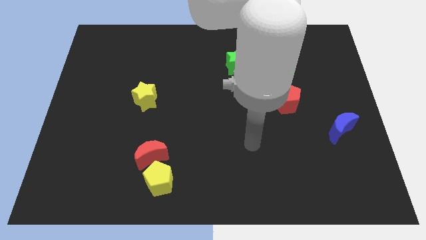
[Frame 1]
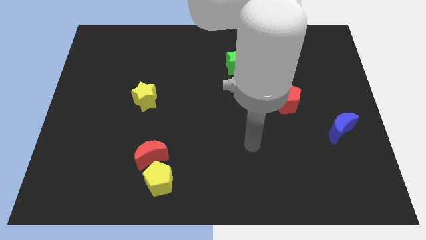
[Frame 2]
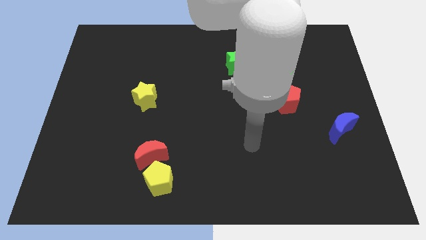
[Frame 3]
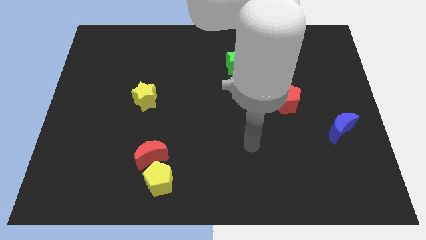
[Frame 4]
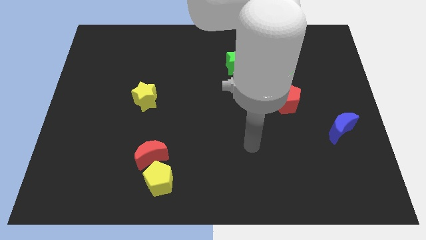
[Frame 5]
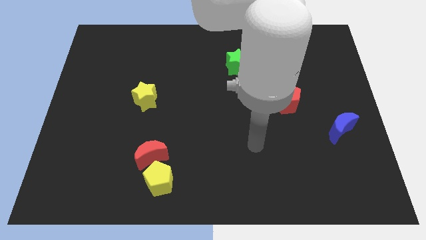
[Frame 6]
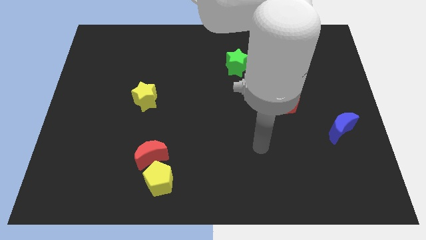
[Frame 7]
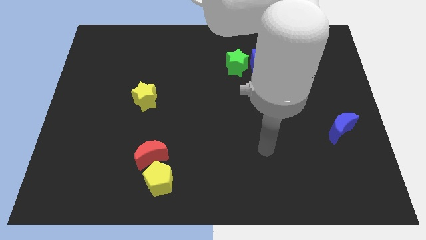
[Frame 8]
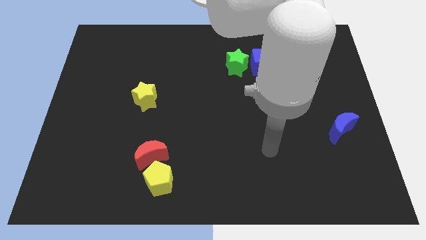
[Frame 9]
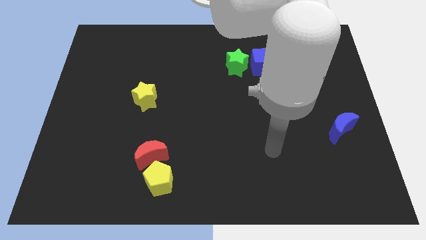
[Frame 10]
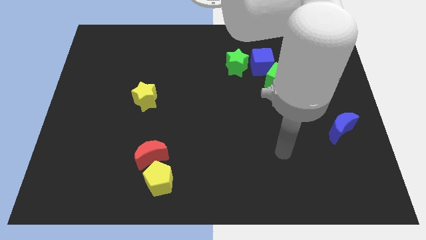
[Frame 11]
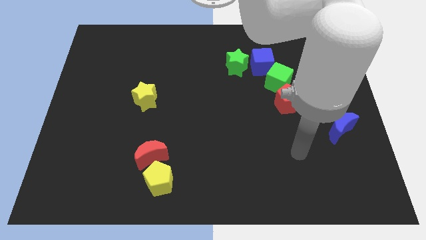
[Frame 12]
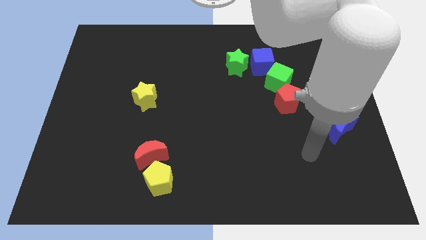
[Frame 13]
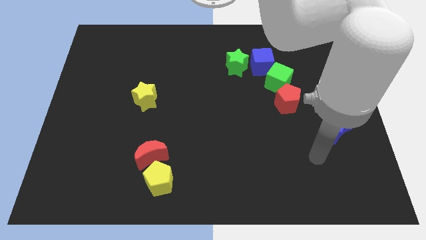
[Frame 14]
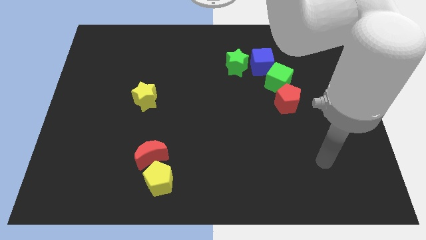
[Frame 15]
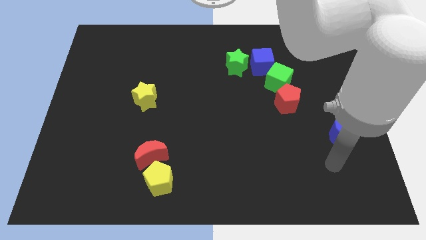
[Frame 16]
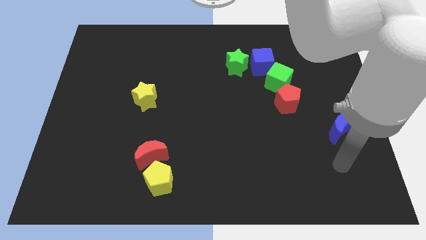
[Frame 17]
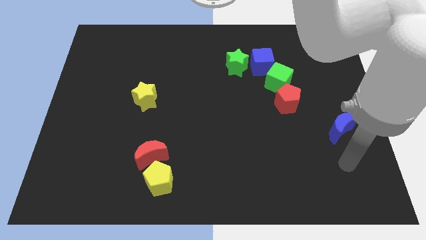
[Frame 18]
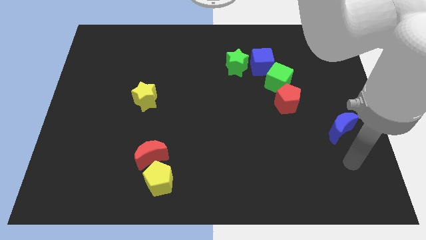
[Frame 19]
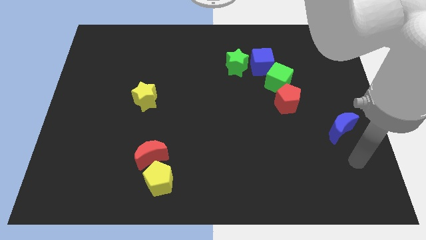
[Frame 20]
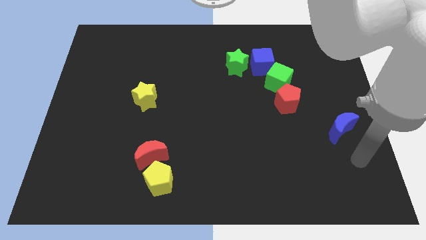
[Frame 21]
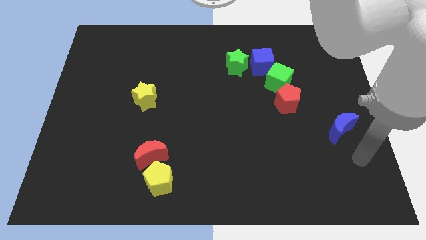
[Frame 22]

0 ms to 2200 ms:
place your arm below the blue crescent

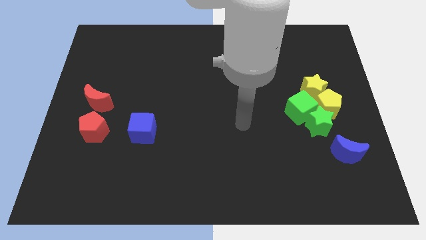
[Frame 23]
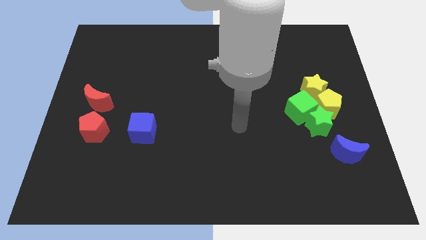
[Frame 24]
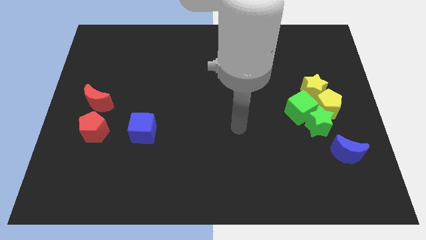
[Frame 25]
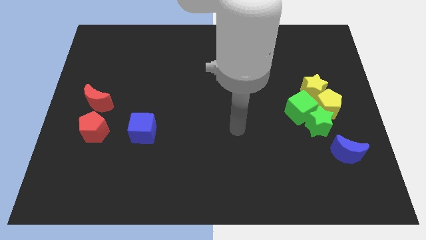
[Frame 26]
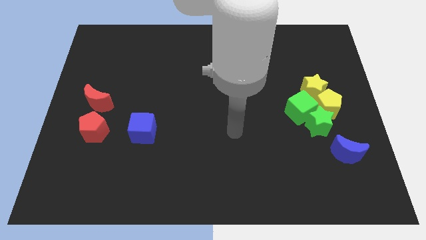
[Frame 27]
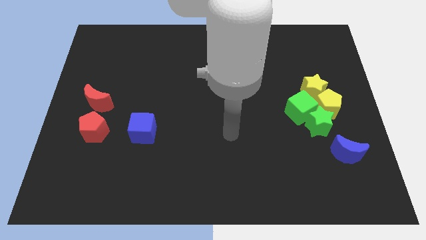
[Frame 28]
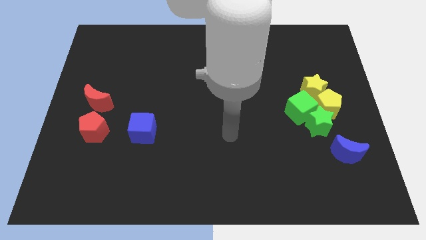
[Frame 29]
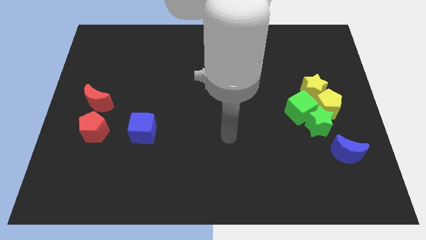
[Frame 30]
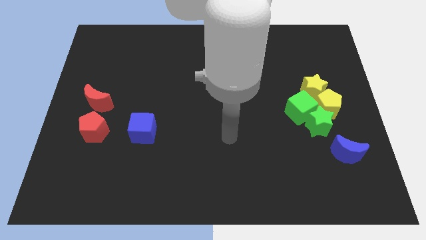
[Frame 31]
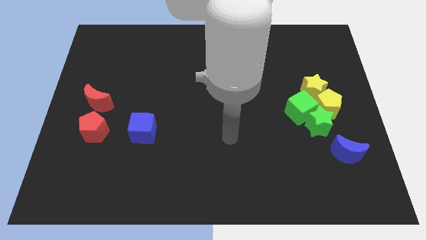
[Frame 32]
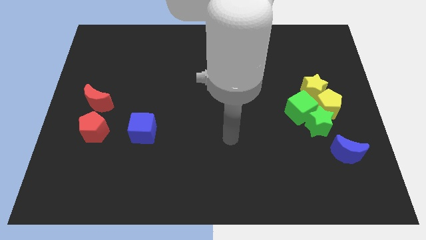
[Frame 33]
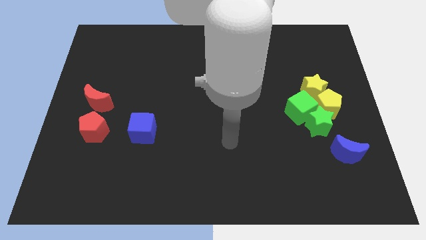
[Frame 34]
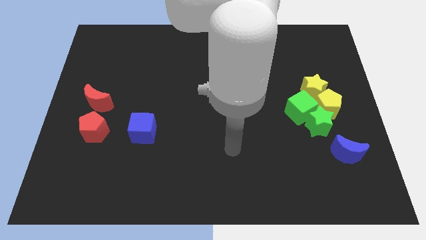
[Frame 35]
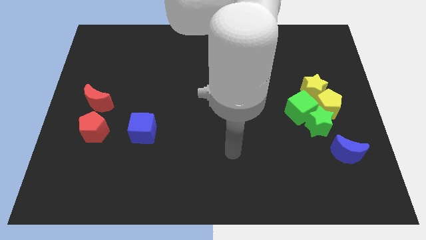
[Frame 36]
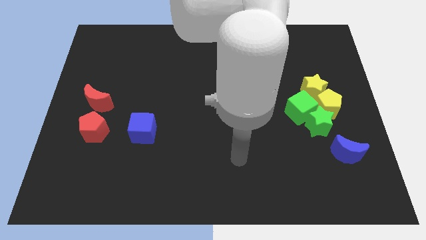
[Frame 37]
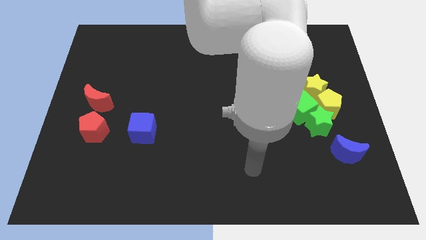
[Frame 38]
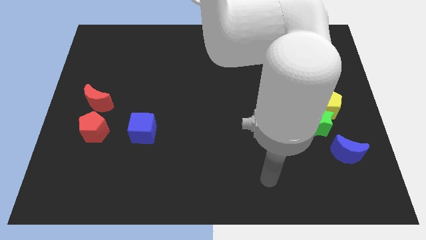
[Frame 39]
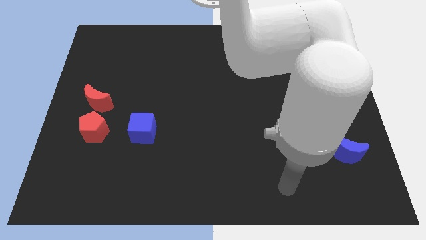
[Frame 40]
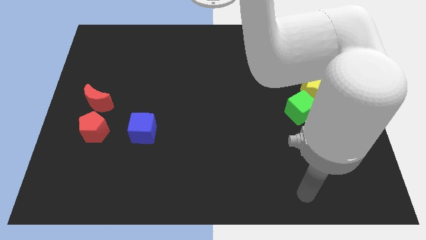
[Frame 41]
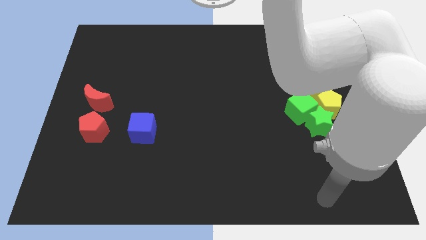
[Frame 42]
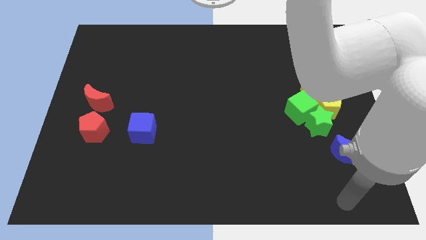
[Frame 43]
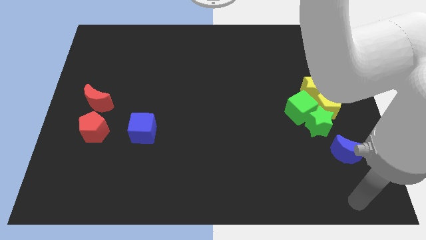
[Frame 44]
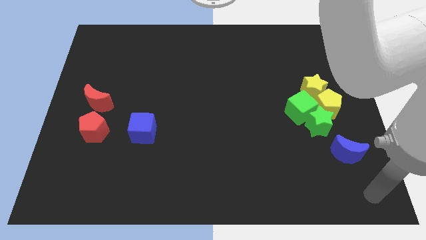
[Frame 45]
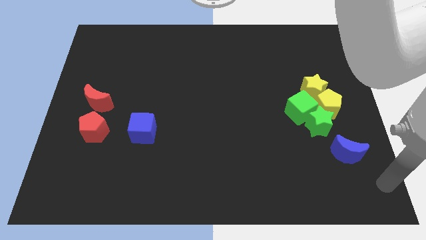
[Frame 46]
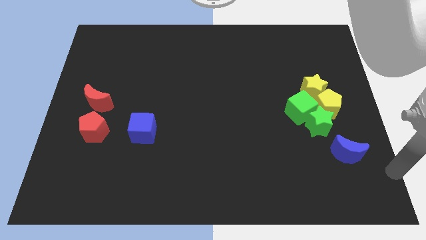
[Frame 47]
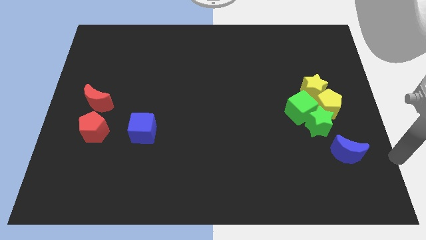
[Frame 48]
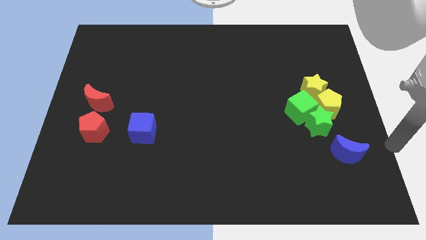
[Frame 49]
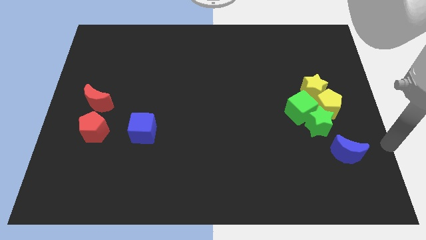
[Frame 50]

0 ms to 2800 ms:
move arm to the right end of the board

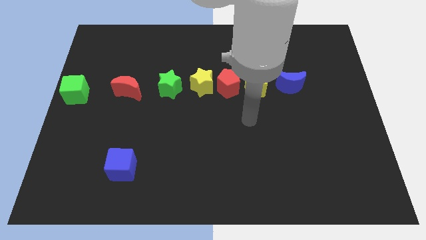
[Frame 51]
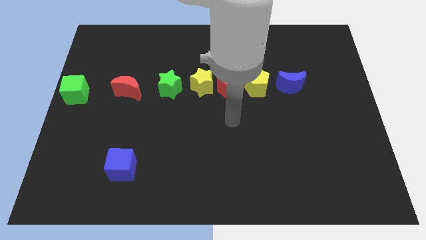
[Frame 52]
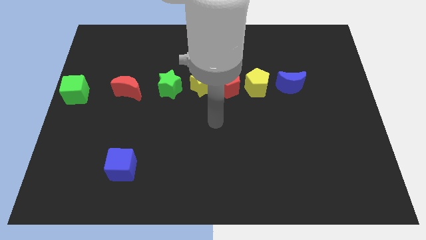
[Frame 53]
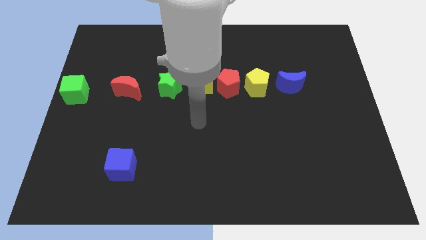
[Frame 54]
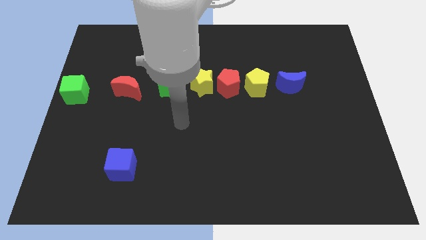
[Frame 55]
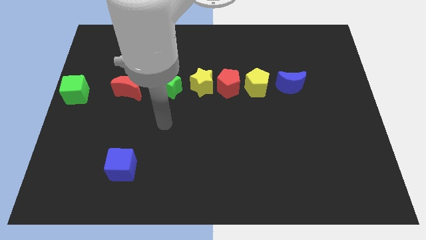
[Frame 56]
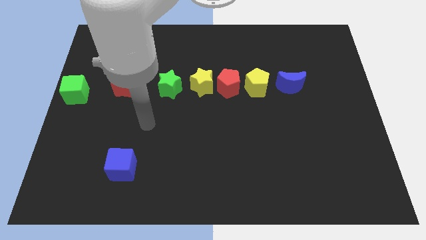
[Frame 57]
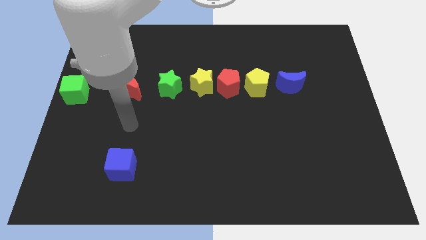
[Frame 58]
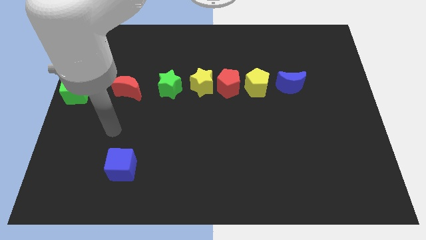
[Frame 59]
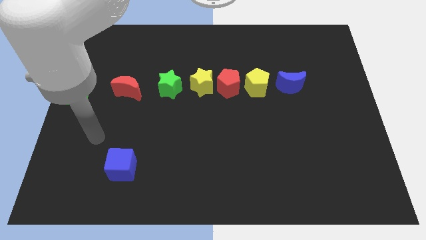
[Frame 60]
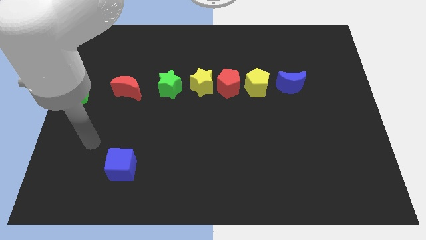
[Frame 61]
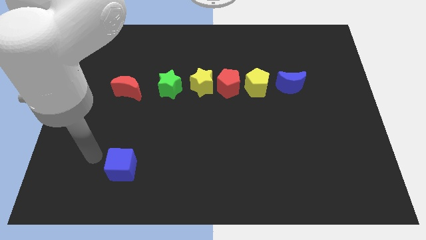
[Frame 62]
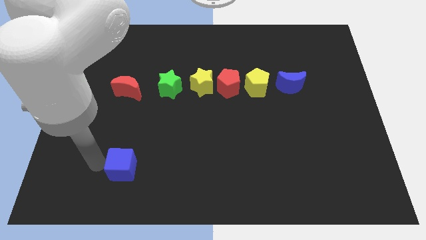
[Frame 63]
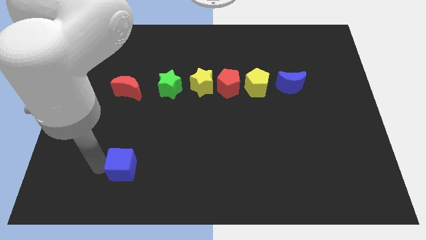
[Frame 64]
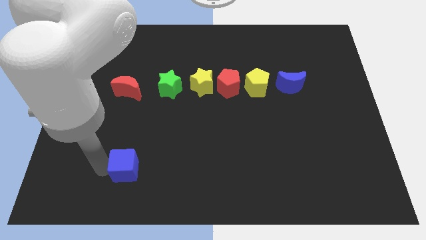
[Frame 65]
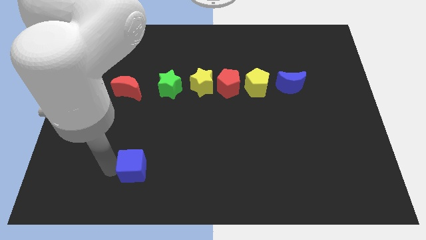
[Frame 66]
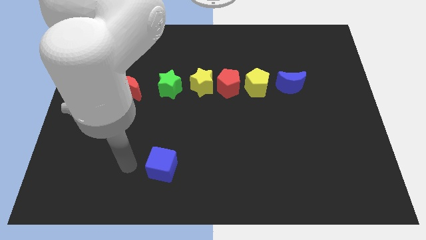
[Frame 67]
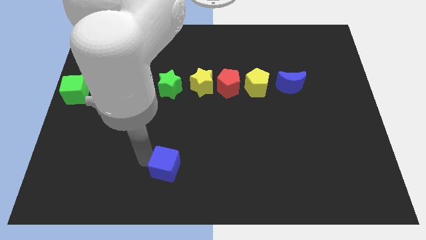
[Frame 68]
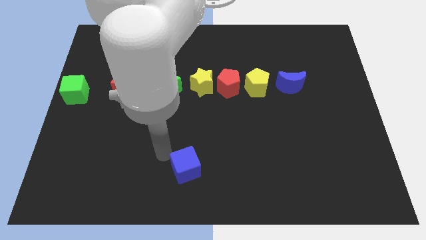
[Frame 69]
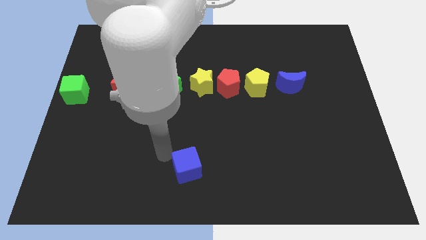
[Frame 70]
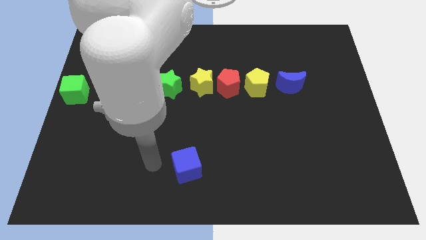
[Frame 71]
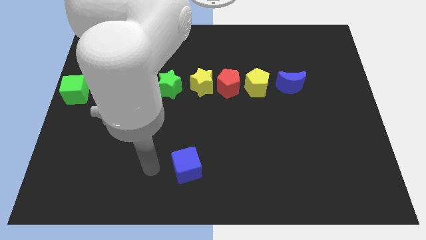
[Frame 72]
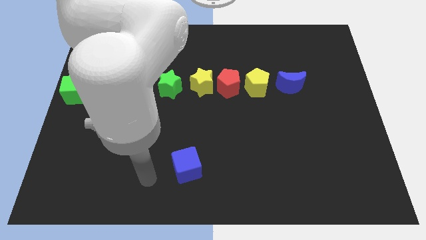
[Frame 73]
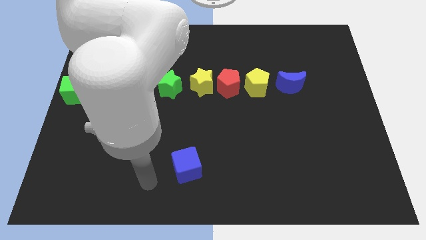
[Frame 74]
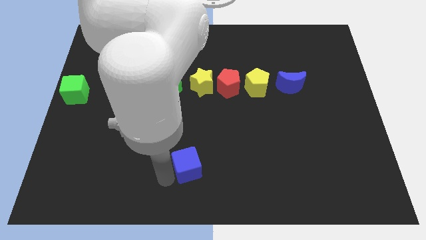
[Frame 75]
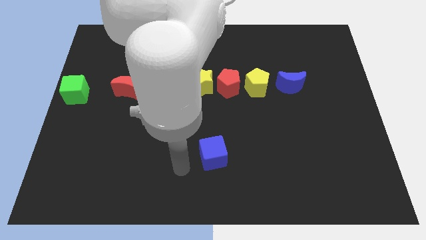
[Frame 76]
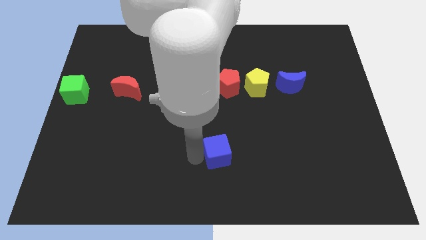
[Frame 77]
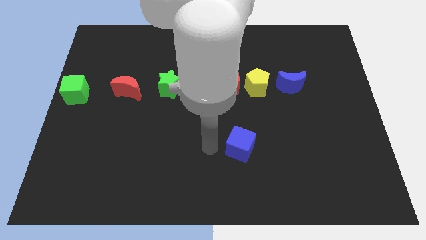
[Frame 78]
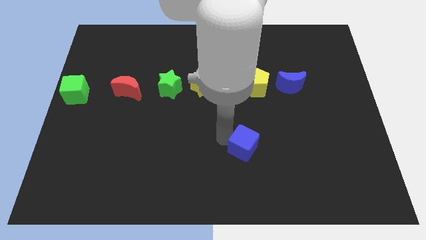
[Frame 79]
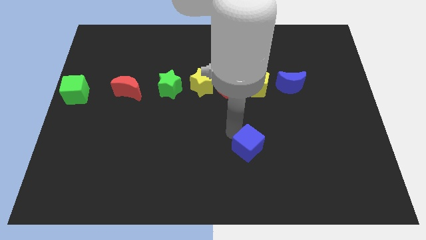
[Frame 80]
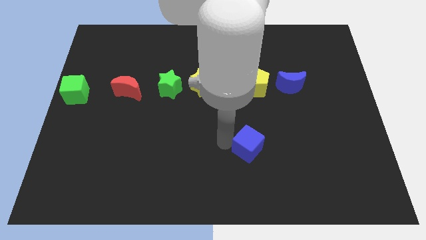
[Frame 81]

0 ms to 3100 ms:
move the blue cube to the right of the board

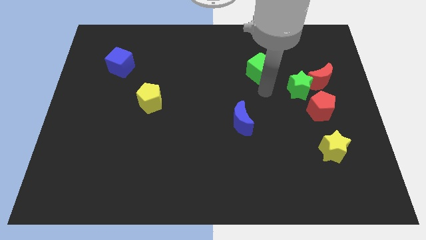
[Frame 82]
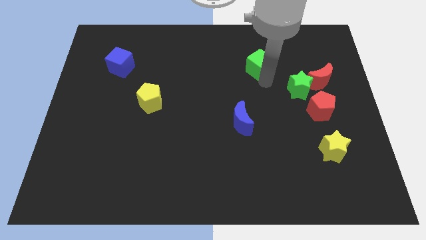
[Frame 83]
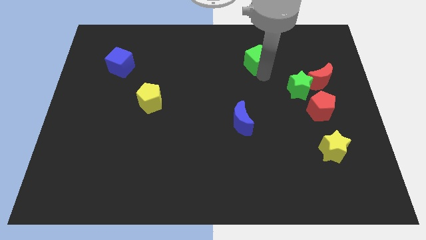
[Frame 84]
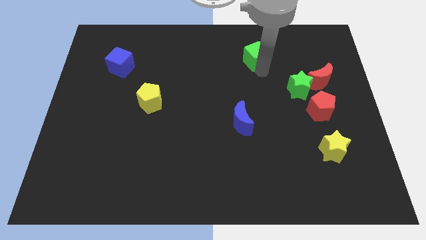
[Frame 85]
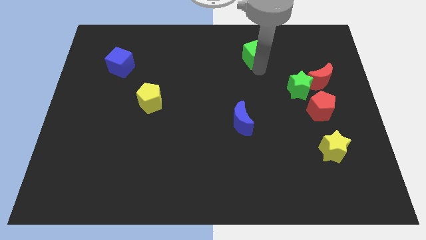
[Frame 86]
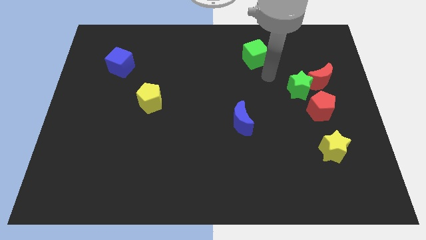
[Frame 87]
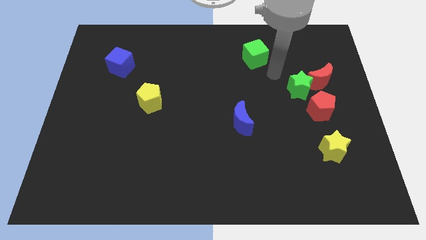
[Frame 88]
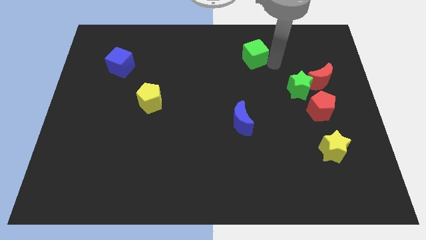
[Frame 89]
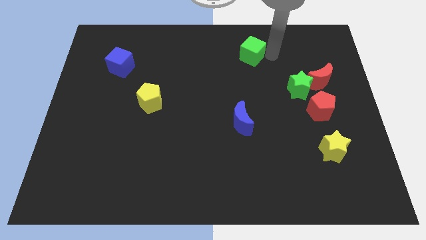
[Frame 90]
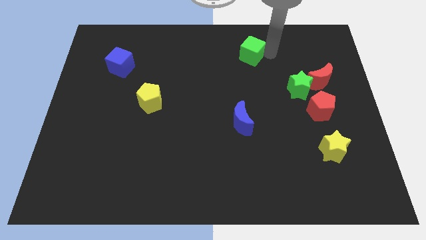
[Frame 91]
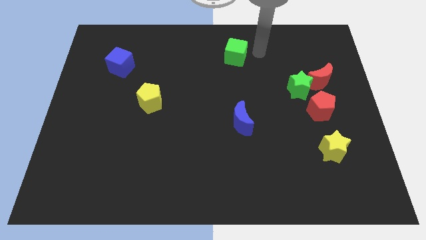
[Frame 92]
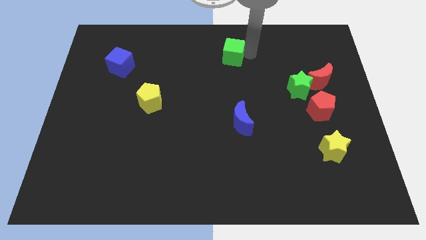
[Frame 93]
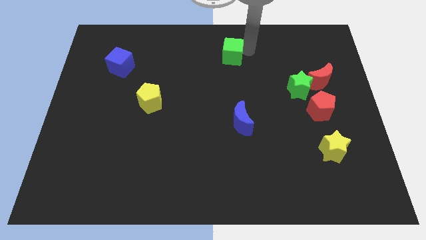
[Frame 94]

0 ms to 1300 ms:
move the green cube upwards slightly towards the top center of the board
